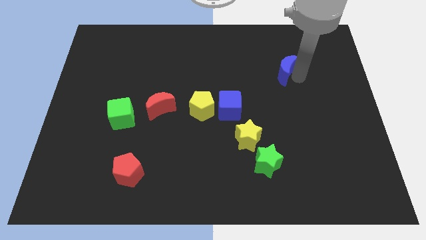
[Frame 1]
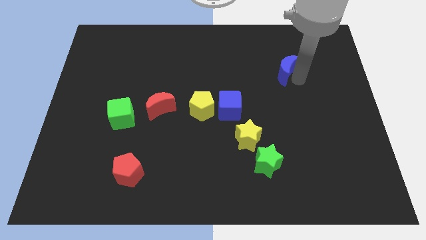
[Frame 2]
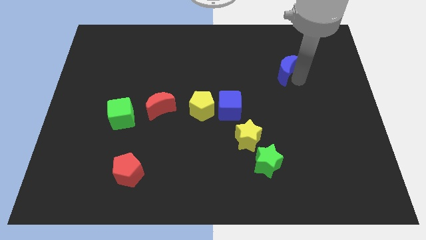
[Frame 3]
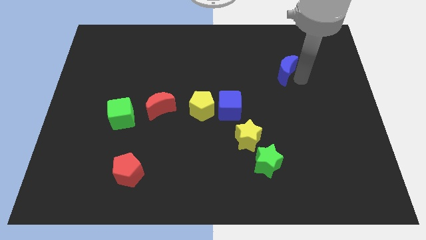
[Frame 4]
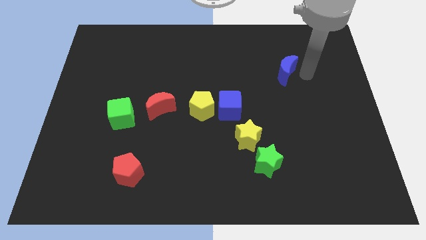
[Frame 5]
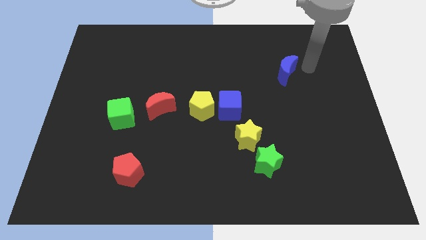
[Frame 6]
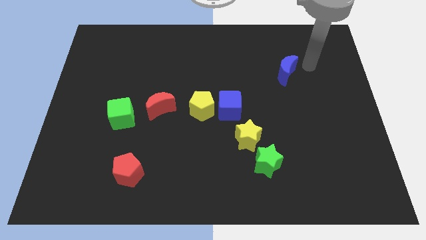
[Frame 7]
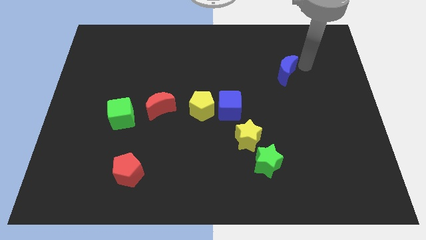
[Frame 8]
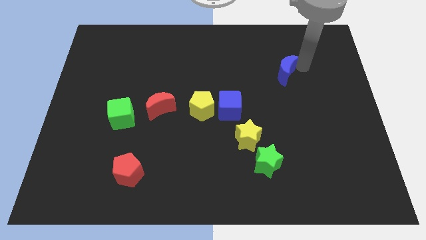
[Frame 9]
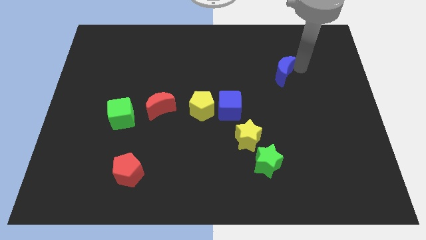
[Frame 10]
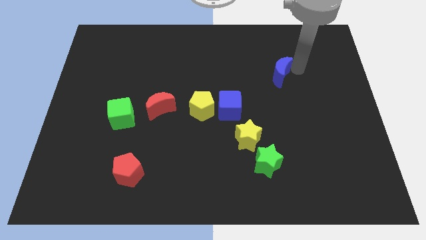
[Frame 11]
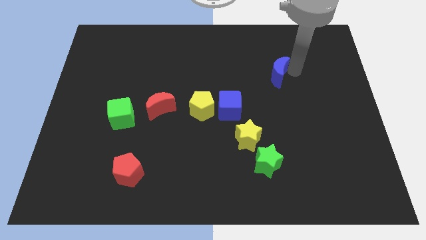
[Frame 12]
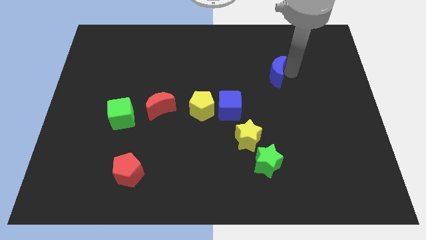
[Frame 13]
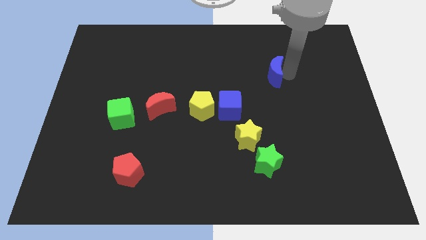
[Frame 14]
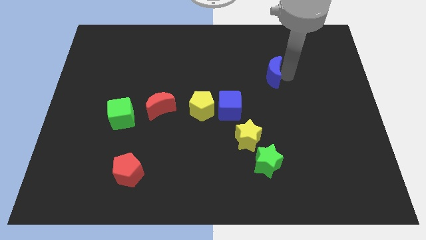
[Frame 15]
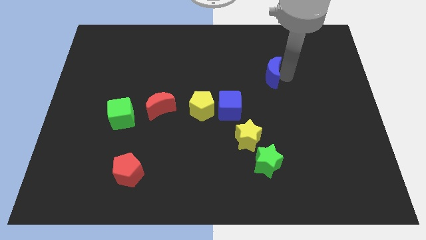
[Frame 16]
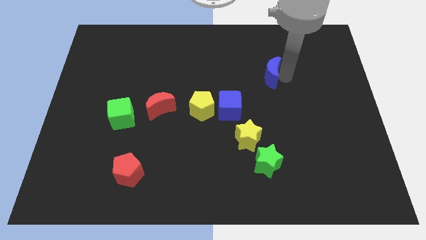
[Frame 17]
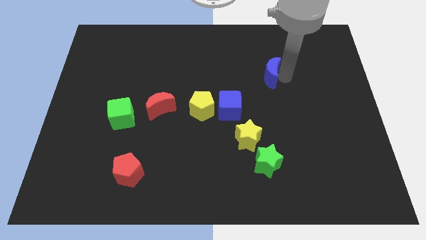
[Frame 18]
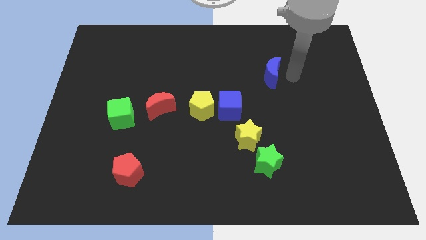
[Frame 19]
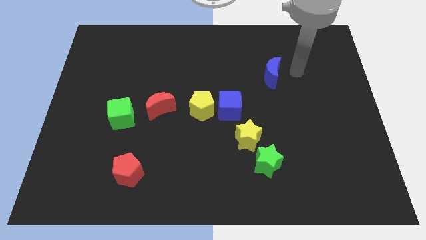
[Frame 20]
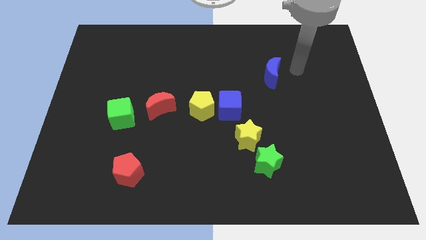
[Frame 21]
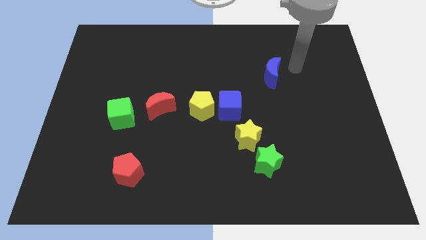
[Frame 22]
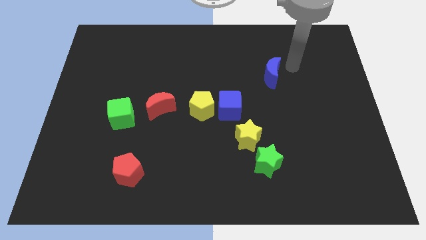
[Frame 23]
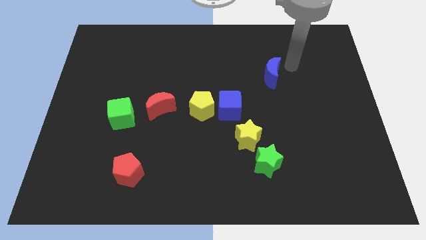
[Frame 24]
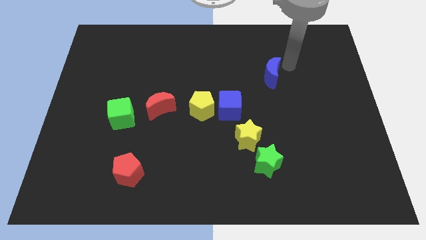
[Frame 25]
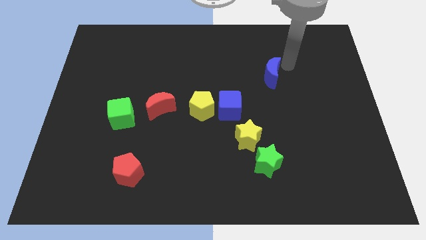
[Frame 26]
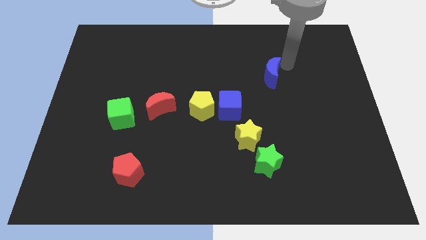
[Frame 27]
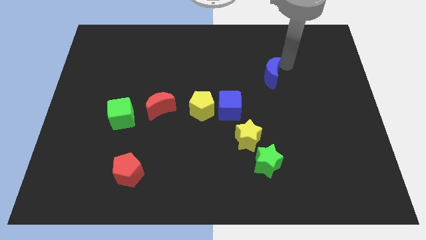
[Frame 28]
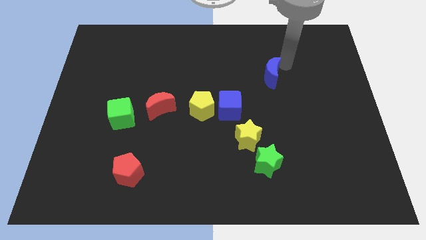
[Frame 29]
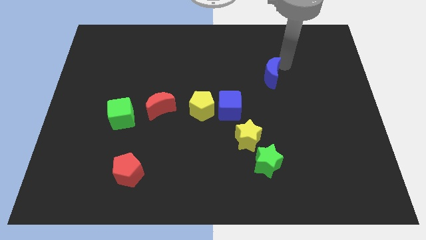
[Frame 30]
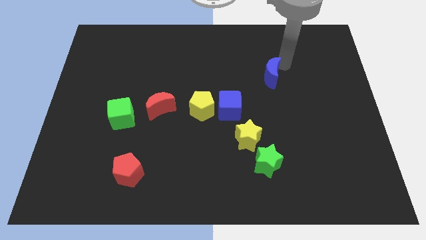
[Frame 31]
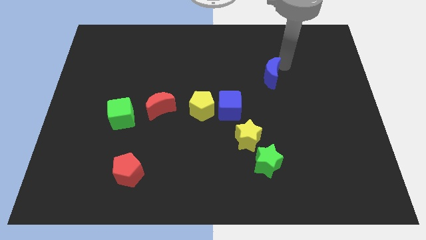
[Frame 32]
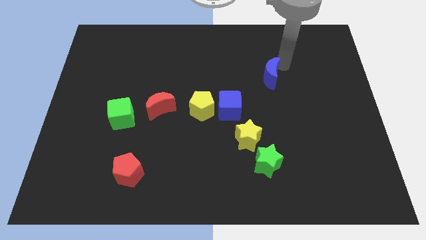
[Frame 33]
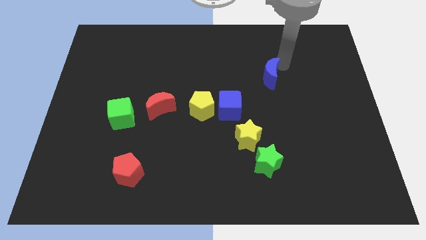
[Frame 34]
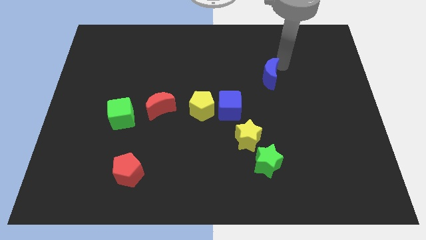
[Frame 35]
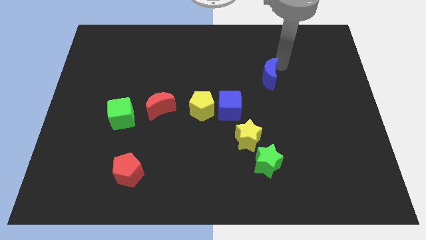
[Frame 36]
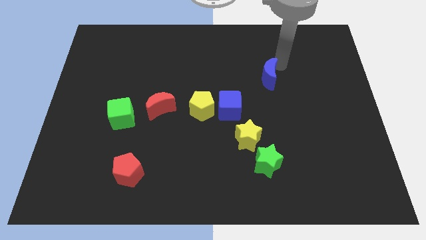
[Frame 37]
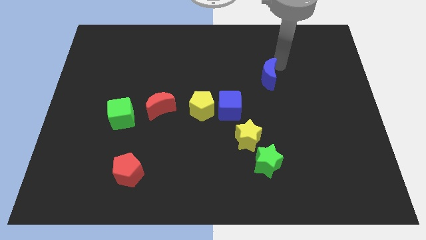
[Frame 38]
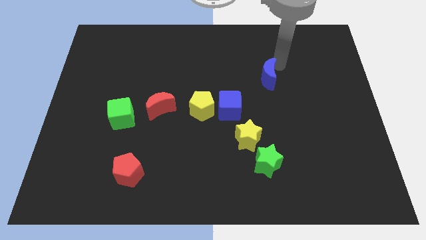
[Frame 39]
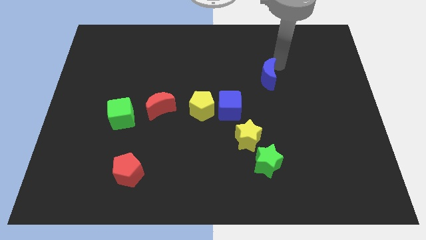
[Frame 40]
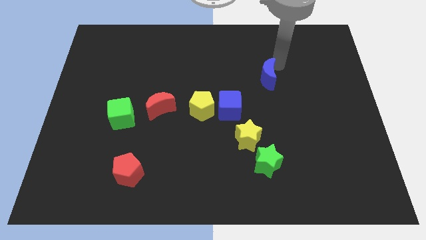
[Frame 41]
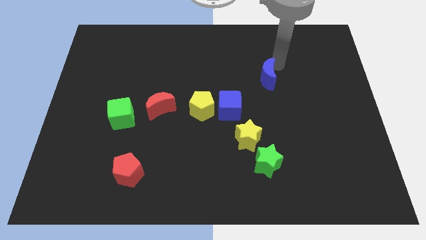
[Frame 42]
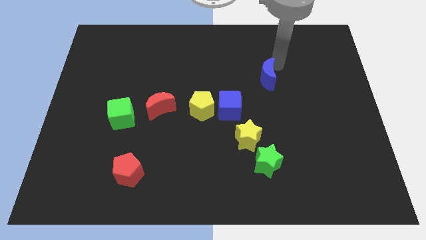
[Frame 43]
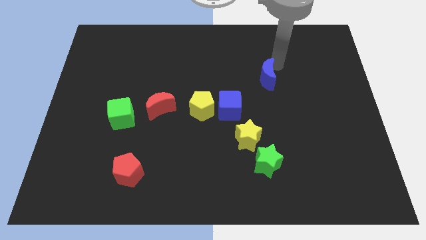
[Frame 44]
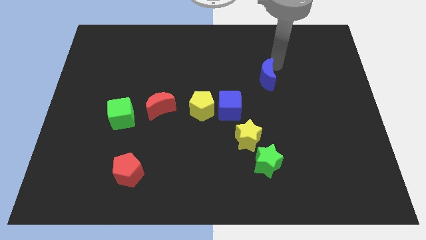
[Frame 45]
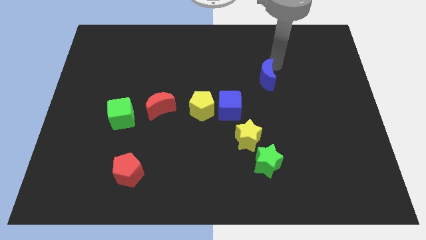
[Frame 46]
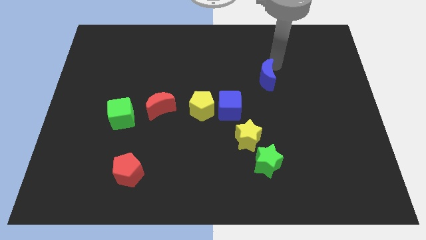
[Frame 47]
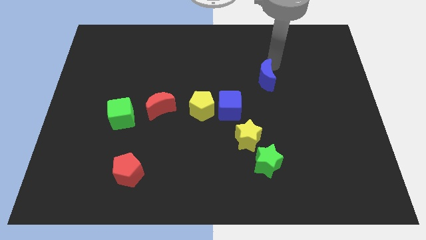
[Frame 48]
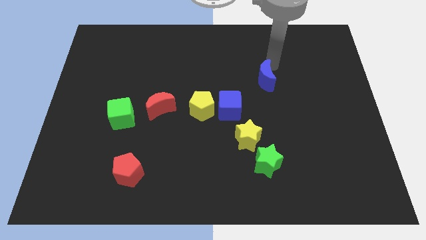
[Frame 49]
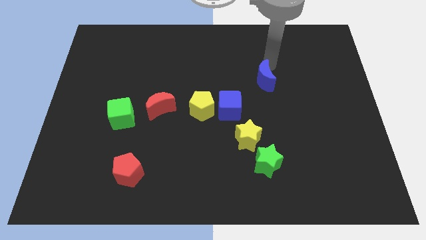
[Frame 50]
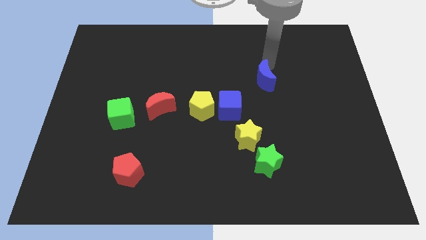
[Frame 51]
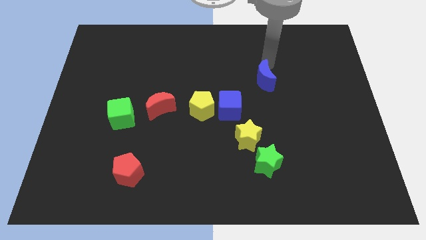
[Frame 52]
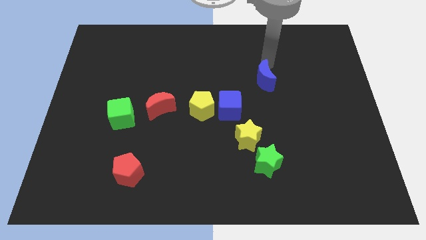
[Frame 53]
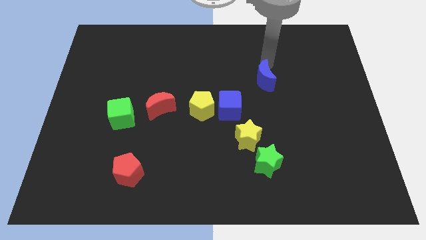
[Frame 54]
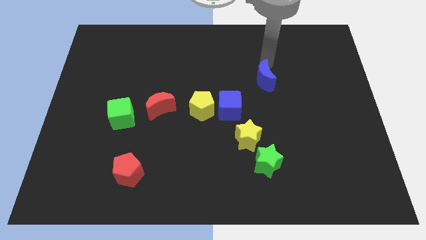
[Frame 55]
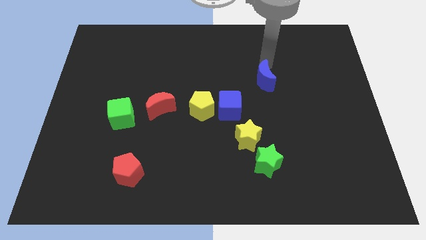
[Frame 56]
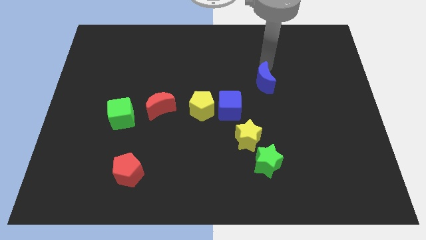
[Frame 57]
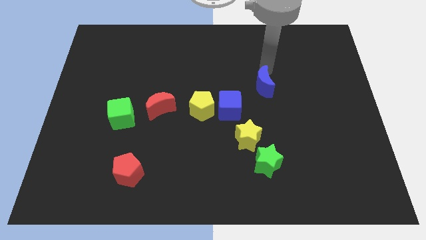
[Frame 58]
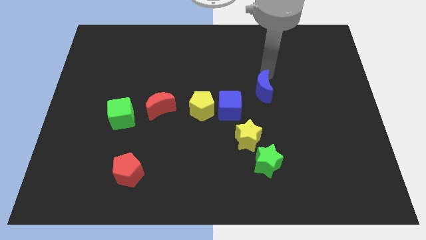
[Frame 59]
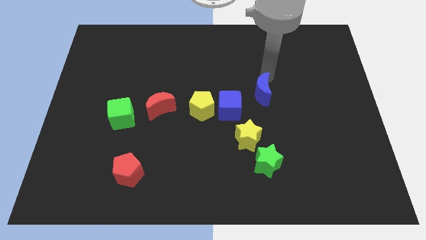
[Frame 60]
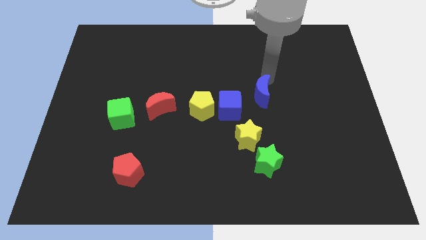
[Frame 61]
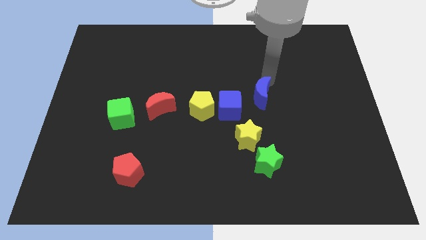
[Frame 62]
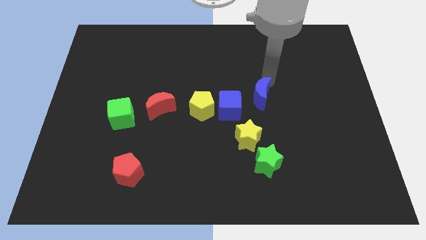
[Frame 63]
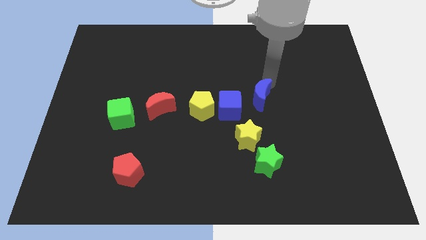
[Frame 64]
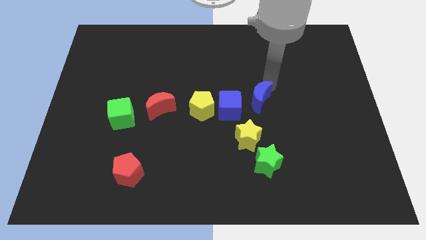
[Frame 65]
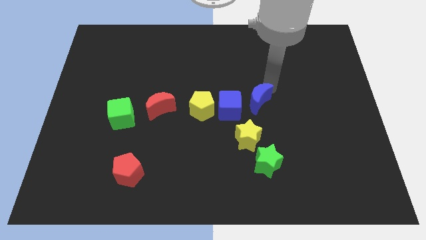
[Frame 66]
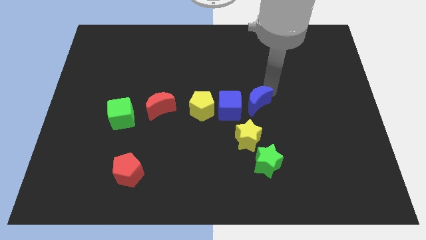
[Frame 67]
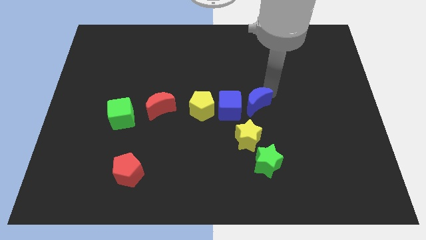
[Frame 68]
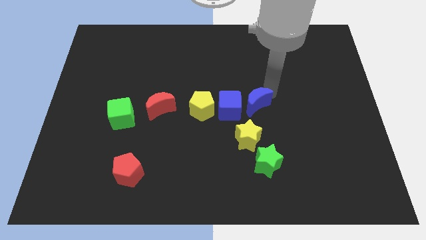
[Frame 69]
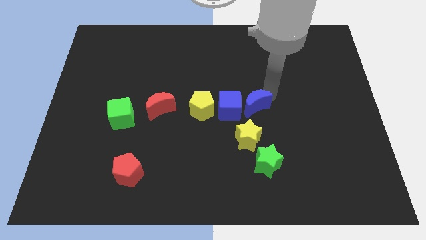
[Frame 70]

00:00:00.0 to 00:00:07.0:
move the blue crescent to the right of the blue cube

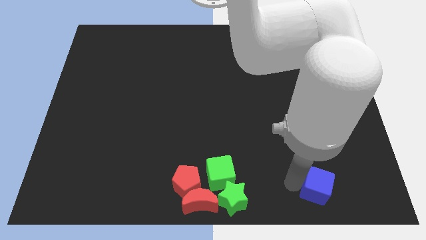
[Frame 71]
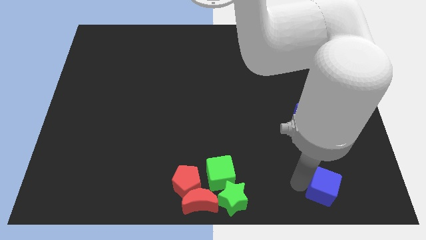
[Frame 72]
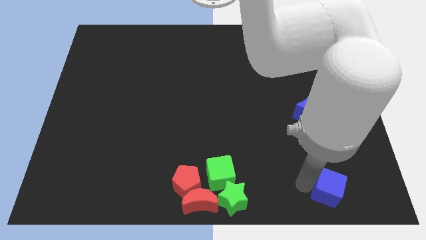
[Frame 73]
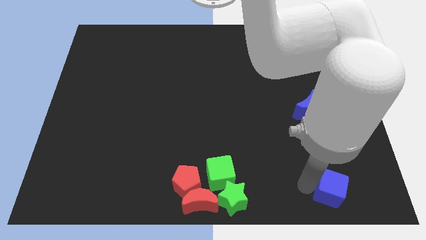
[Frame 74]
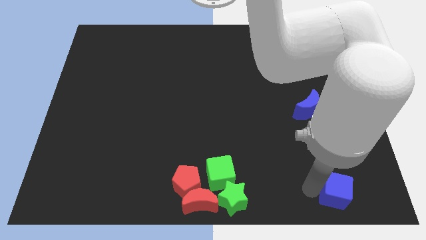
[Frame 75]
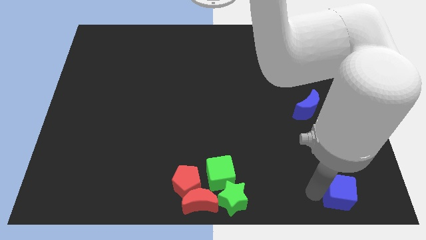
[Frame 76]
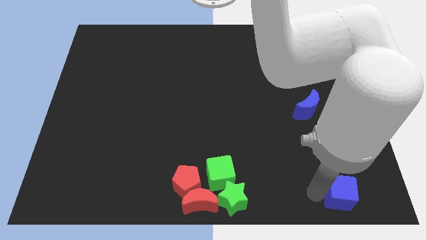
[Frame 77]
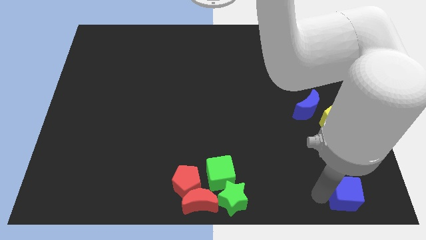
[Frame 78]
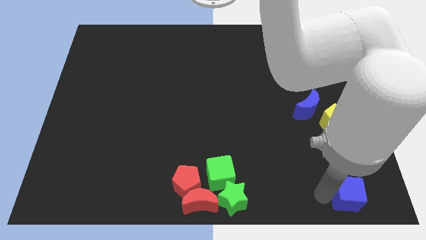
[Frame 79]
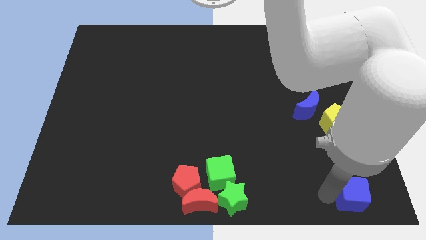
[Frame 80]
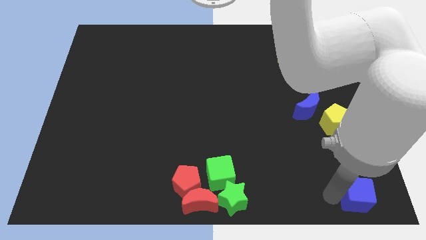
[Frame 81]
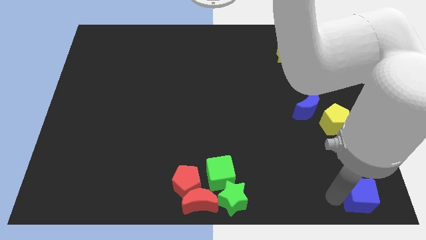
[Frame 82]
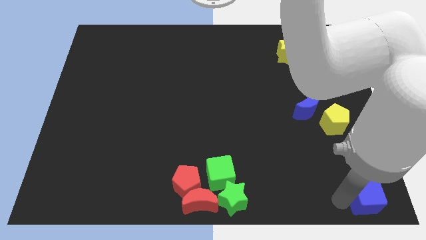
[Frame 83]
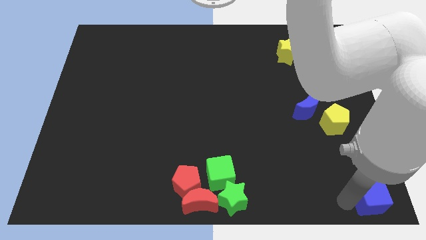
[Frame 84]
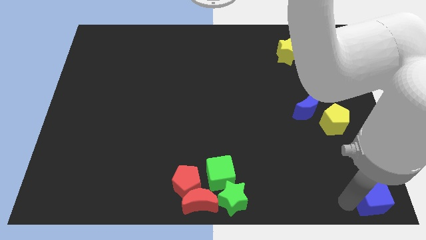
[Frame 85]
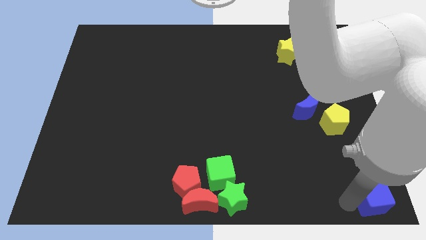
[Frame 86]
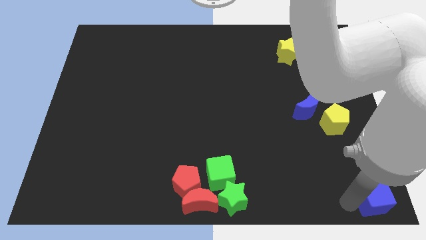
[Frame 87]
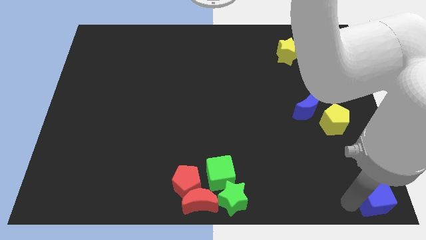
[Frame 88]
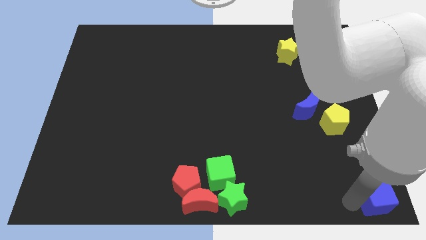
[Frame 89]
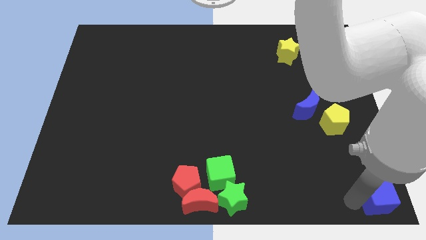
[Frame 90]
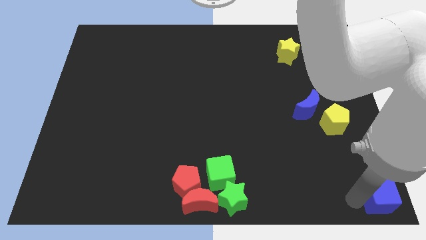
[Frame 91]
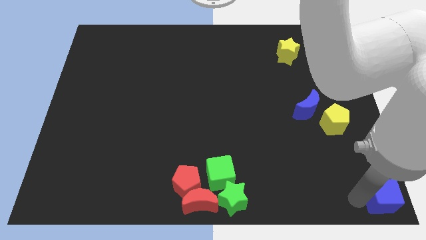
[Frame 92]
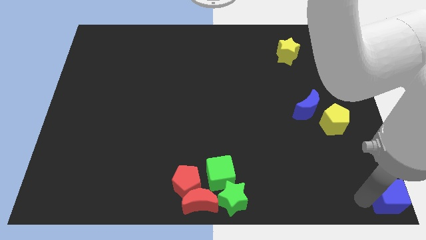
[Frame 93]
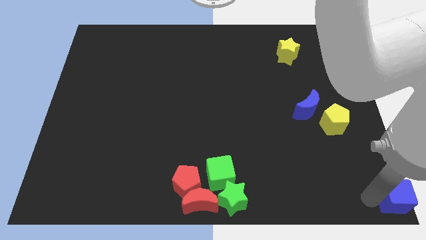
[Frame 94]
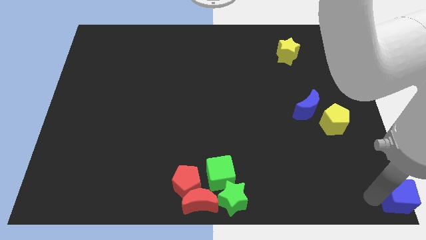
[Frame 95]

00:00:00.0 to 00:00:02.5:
place the blue cube at bottom right corner of the board
